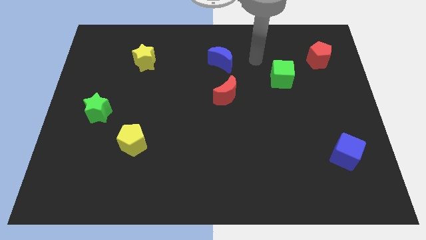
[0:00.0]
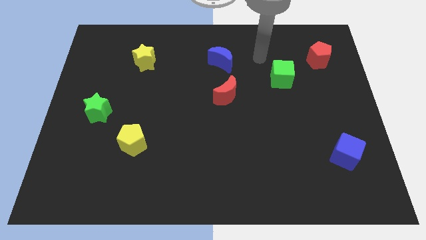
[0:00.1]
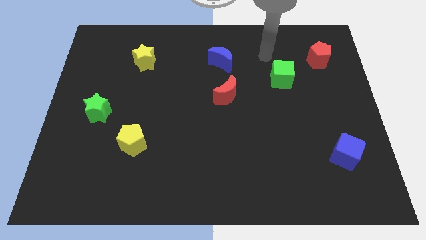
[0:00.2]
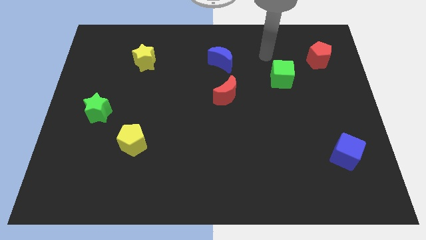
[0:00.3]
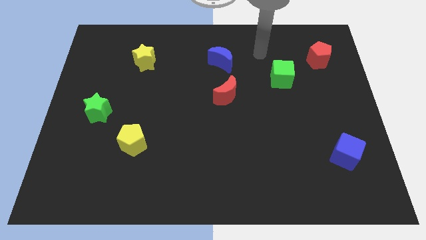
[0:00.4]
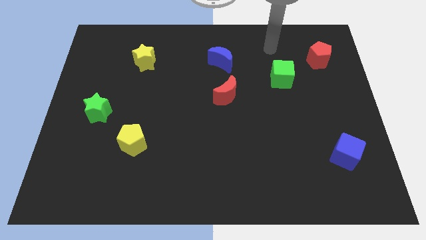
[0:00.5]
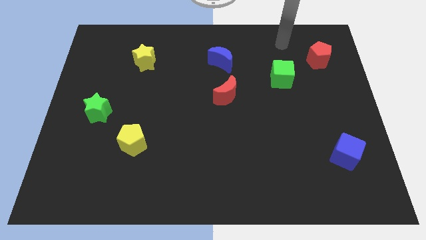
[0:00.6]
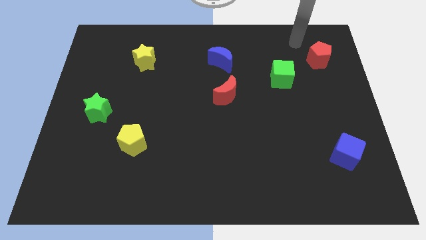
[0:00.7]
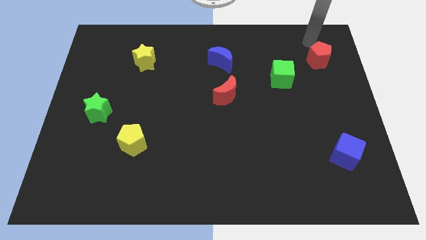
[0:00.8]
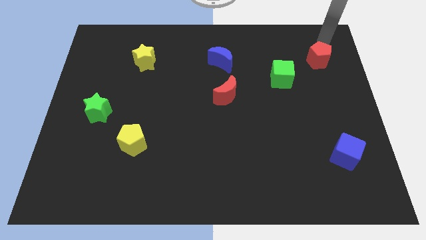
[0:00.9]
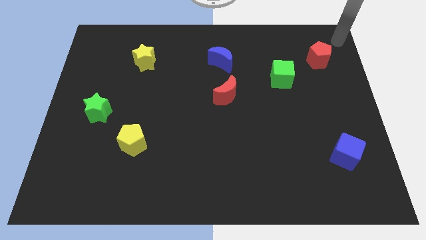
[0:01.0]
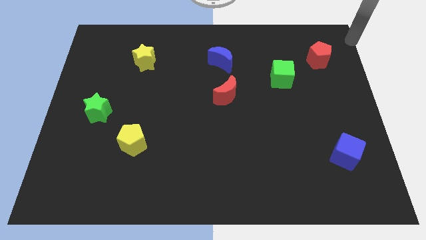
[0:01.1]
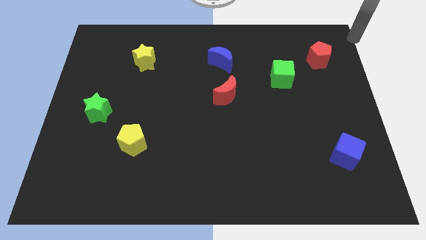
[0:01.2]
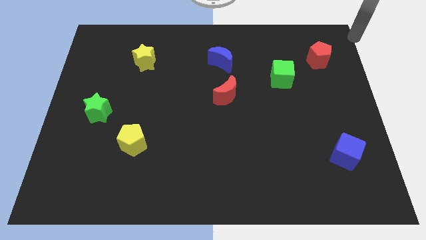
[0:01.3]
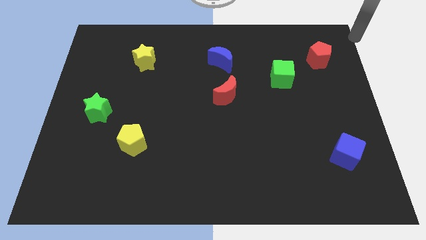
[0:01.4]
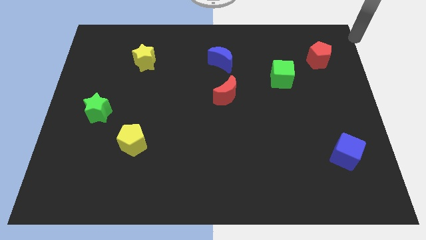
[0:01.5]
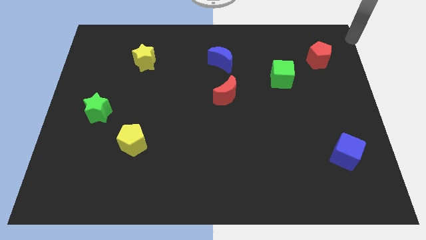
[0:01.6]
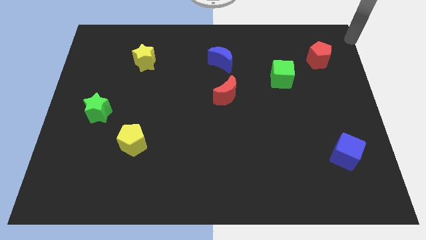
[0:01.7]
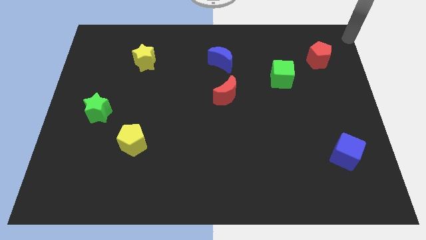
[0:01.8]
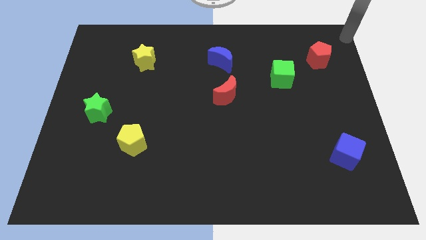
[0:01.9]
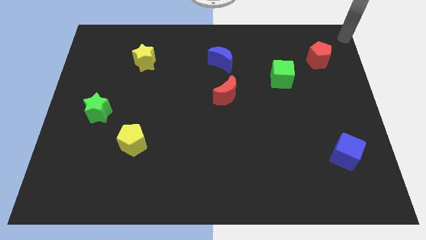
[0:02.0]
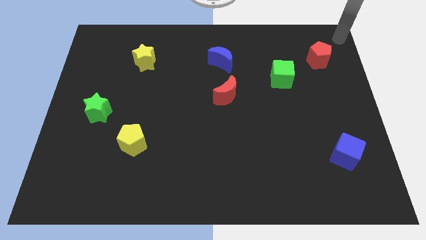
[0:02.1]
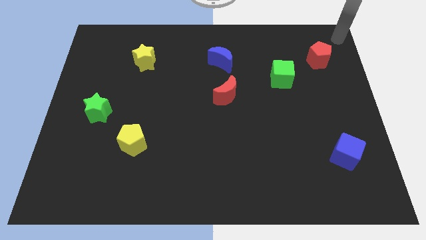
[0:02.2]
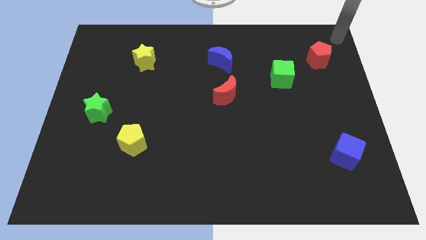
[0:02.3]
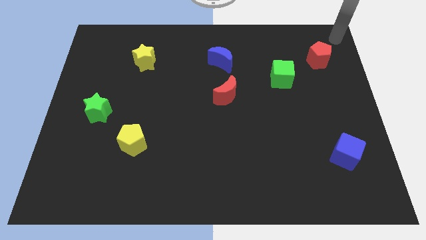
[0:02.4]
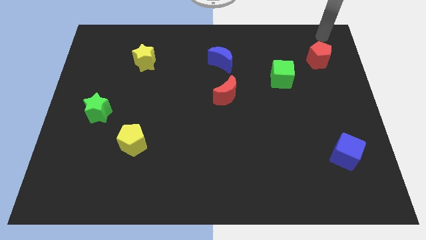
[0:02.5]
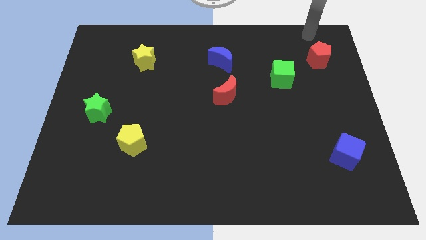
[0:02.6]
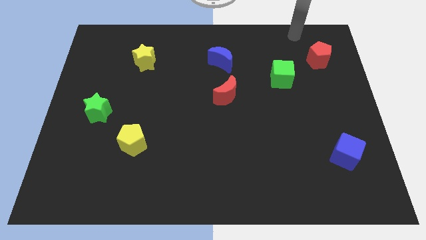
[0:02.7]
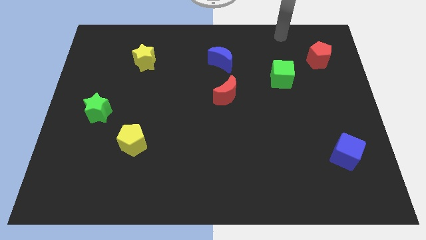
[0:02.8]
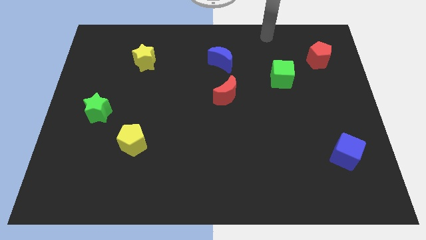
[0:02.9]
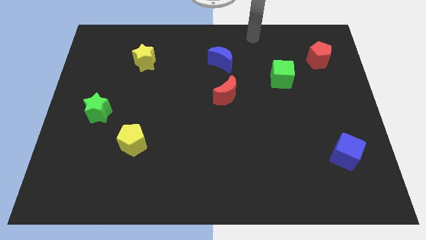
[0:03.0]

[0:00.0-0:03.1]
move your arm towards top center

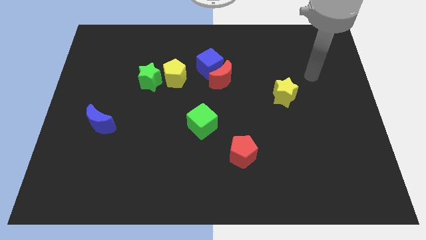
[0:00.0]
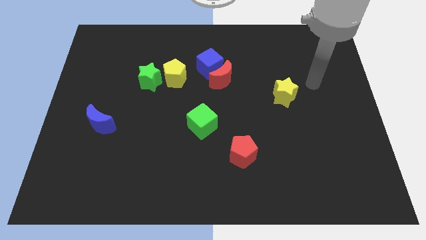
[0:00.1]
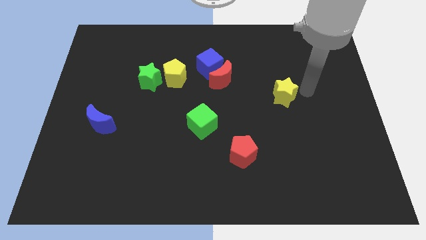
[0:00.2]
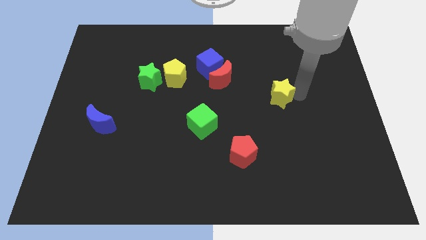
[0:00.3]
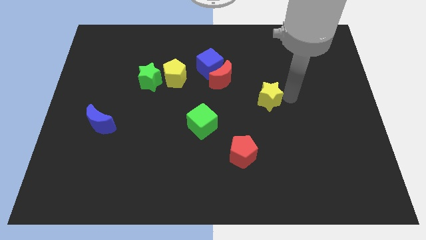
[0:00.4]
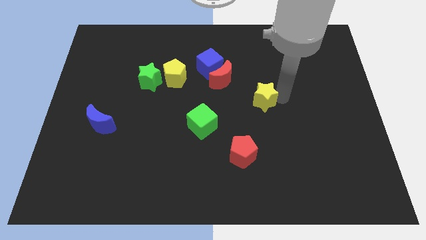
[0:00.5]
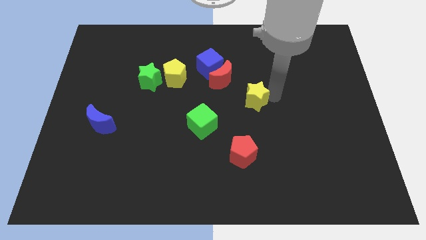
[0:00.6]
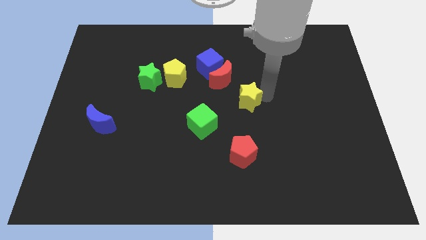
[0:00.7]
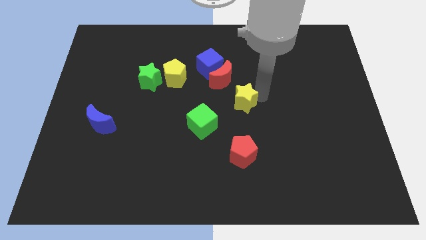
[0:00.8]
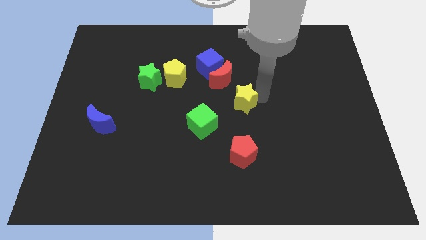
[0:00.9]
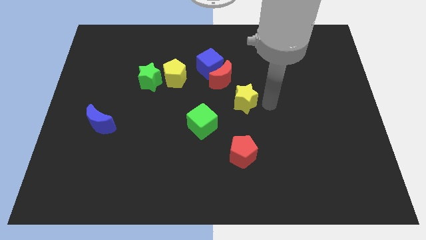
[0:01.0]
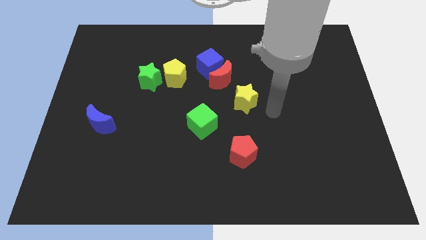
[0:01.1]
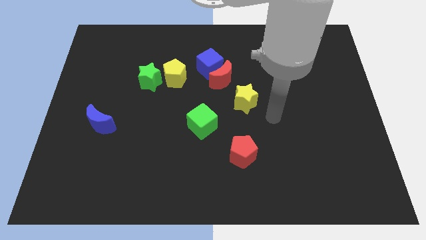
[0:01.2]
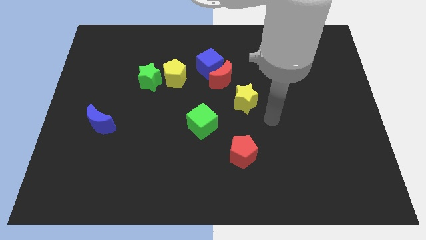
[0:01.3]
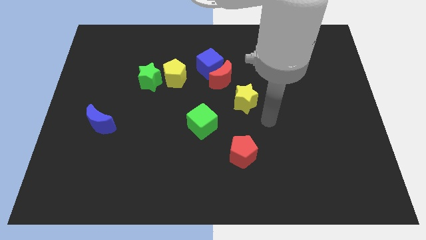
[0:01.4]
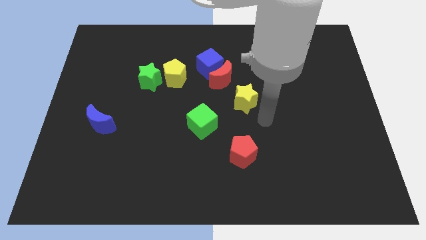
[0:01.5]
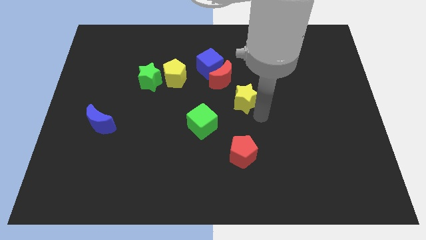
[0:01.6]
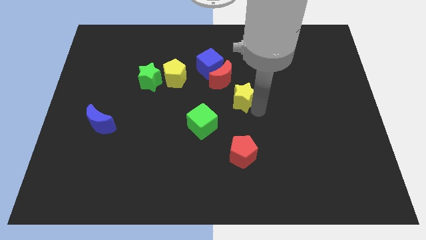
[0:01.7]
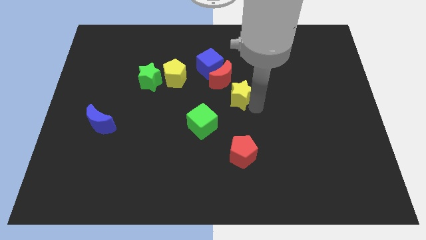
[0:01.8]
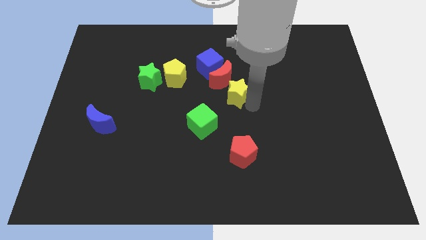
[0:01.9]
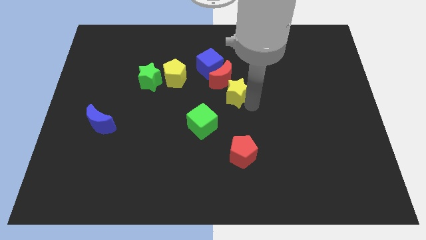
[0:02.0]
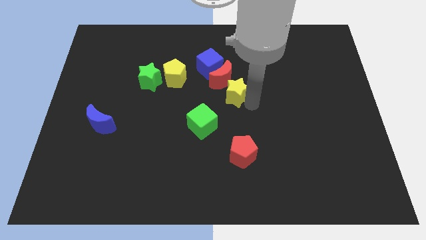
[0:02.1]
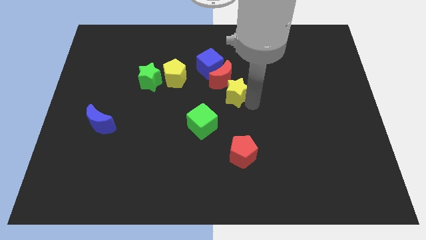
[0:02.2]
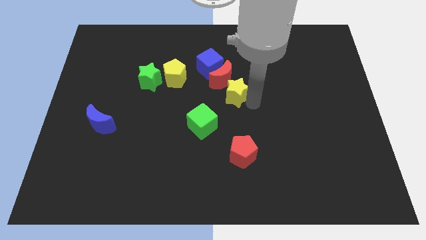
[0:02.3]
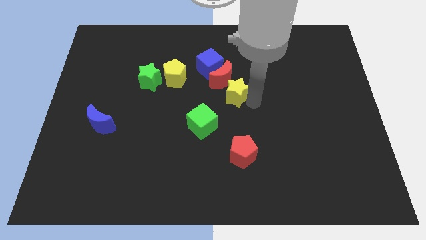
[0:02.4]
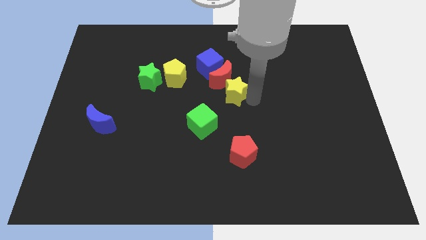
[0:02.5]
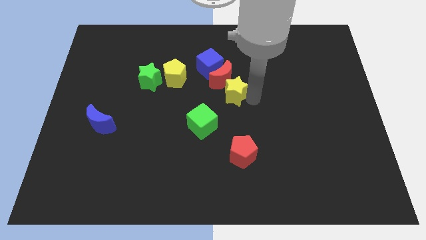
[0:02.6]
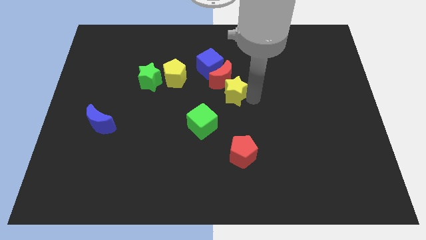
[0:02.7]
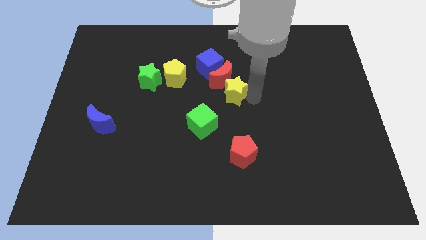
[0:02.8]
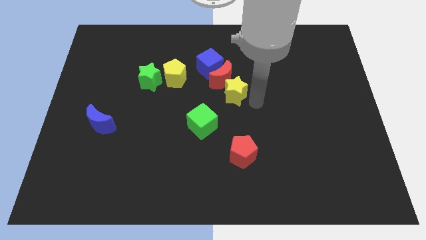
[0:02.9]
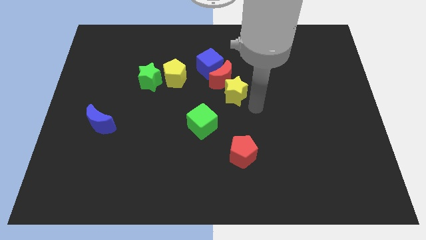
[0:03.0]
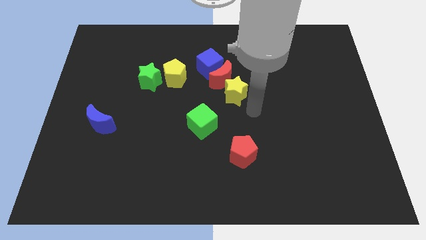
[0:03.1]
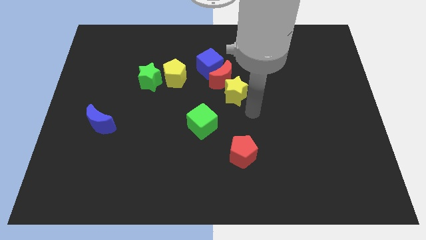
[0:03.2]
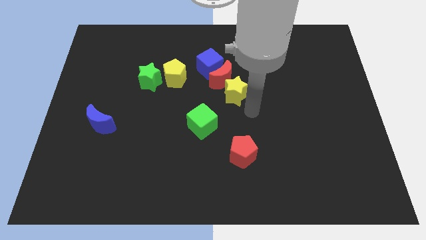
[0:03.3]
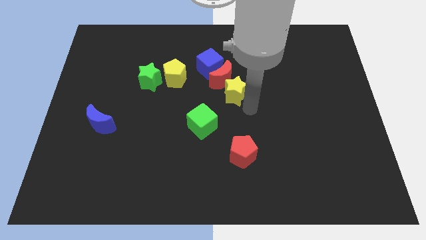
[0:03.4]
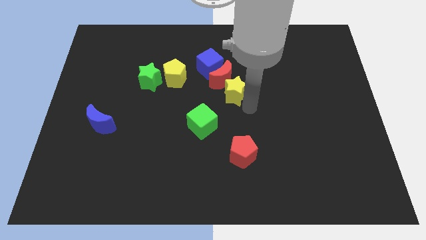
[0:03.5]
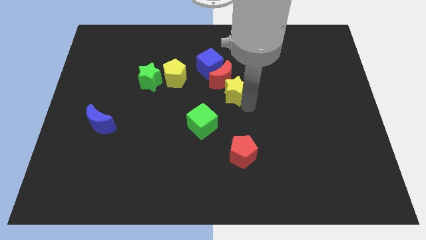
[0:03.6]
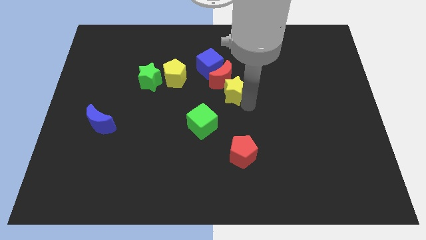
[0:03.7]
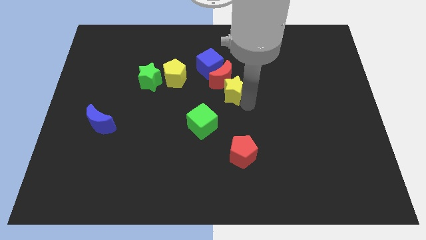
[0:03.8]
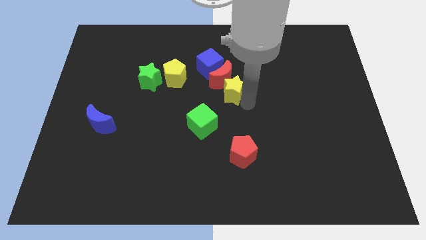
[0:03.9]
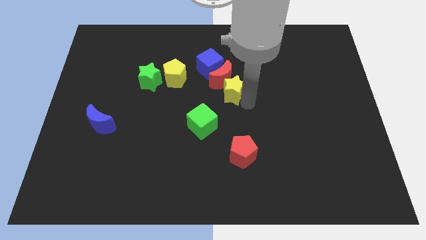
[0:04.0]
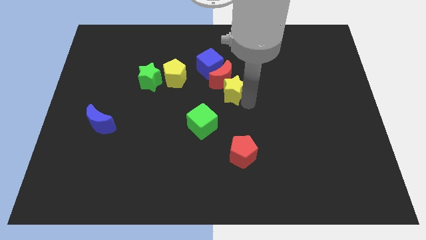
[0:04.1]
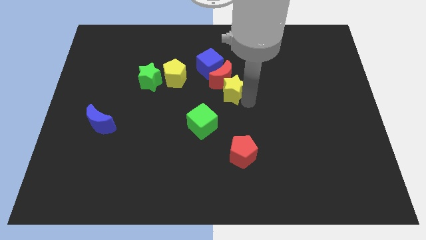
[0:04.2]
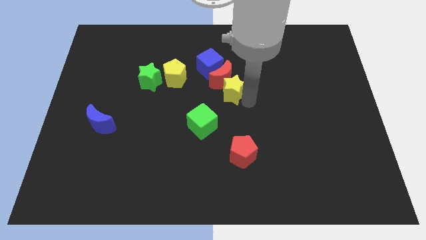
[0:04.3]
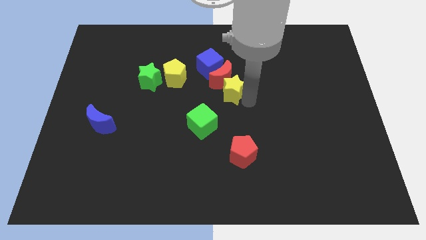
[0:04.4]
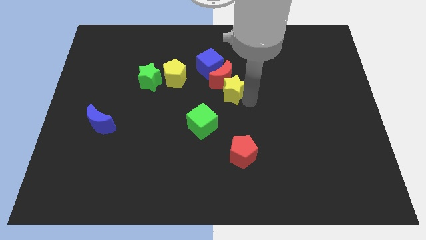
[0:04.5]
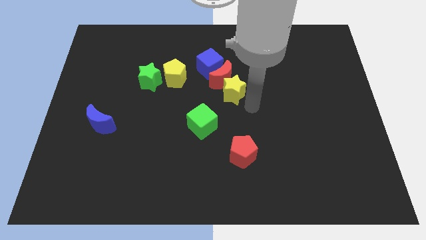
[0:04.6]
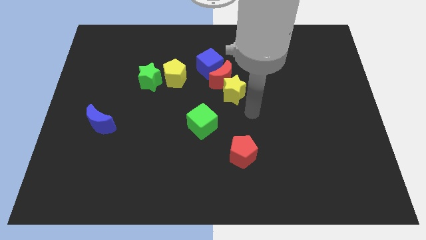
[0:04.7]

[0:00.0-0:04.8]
place the yellow star below the red moon

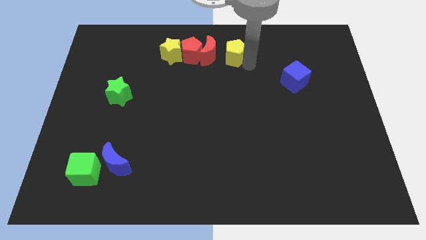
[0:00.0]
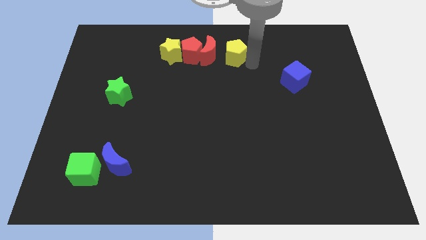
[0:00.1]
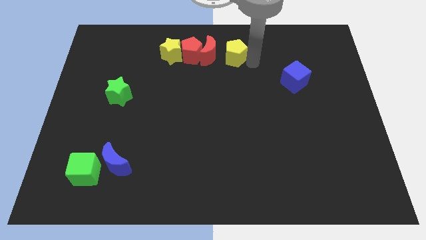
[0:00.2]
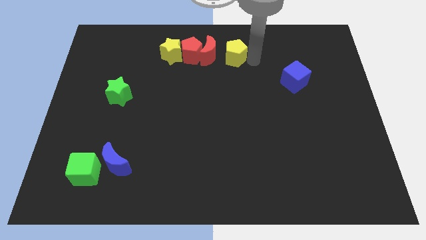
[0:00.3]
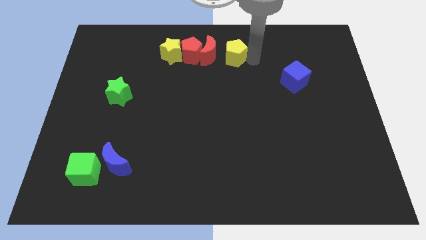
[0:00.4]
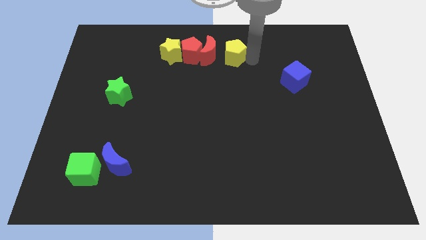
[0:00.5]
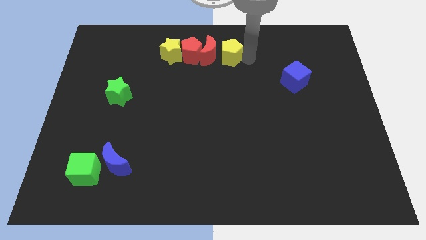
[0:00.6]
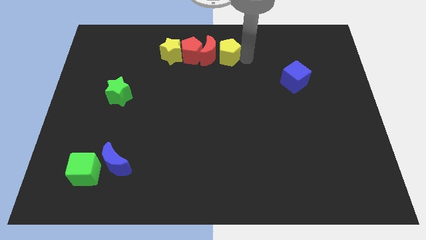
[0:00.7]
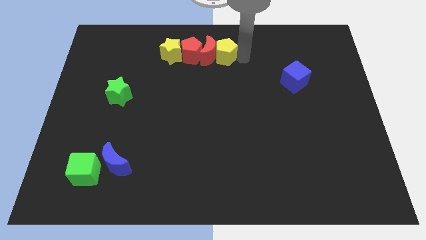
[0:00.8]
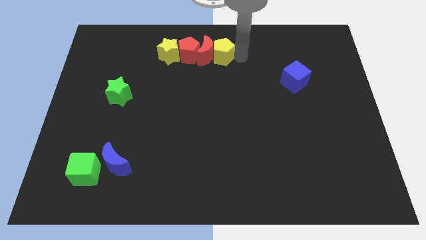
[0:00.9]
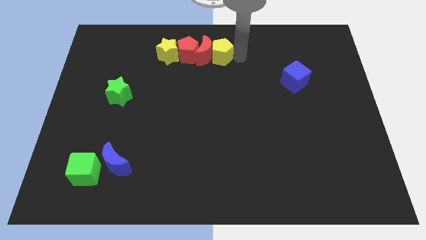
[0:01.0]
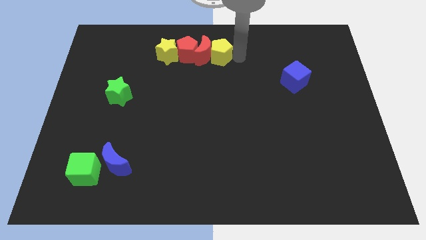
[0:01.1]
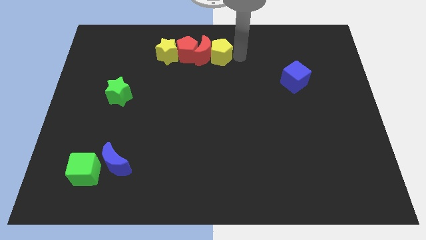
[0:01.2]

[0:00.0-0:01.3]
push yellow pentagon to the top center of the board
